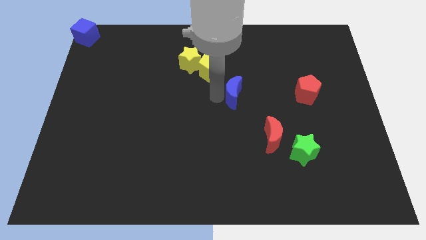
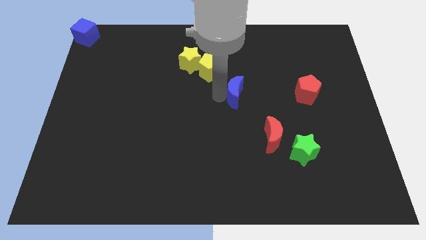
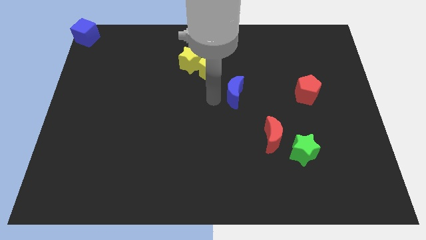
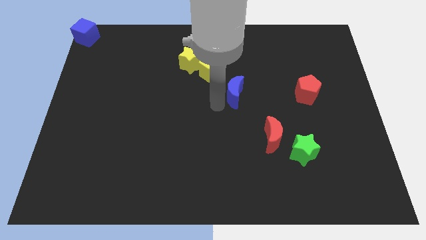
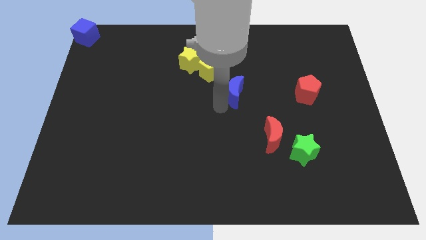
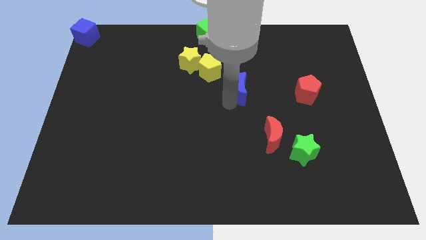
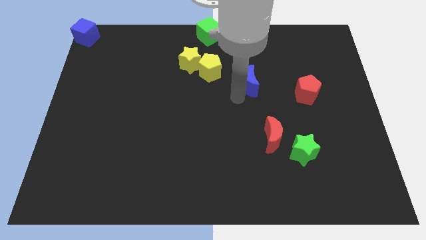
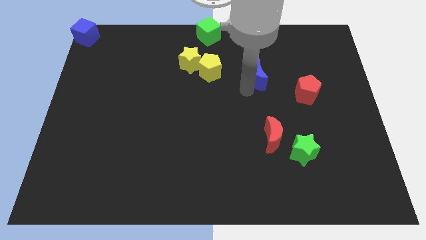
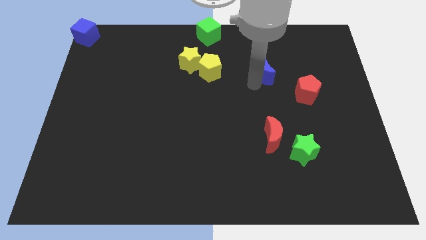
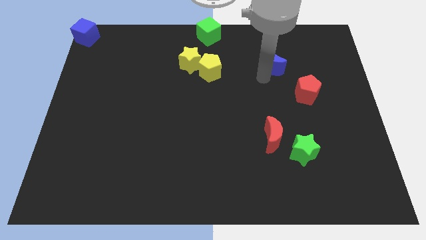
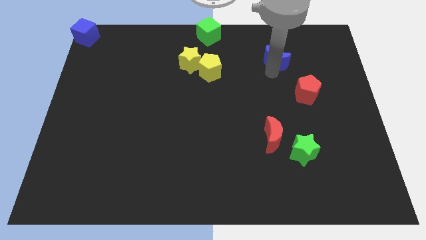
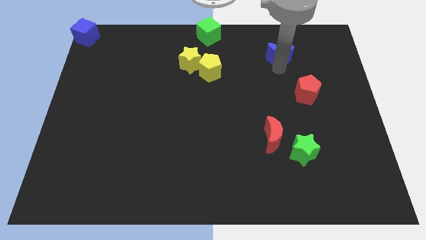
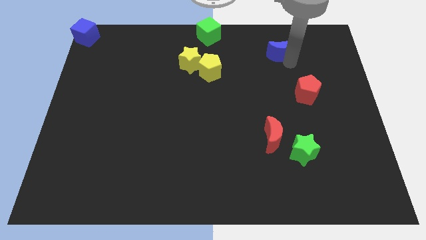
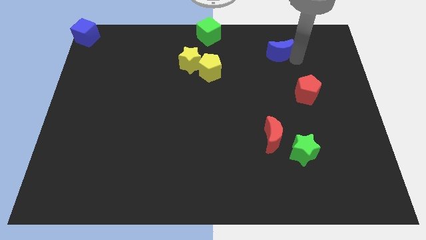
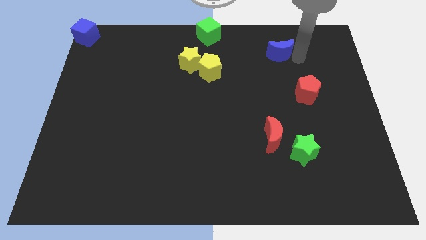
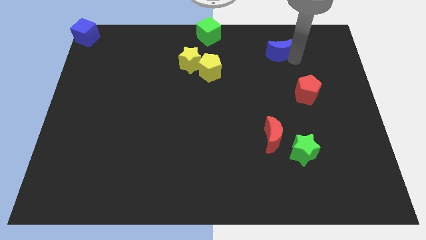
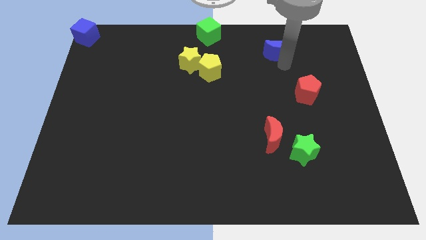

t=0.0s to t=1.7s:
move the blue moon towards the top right

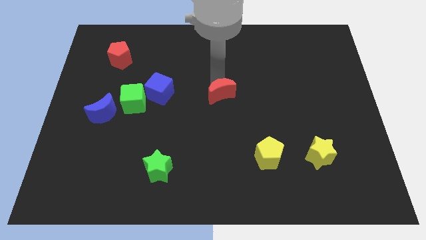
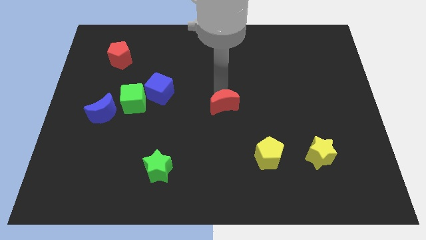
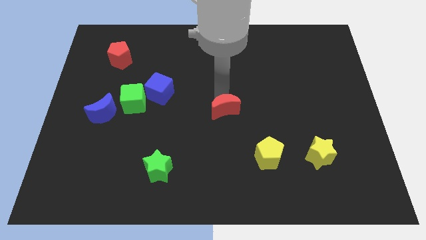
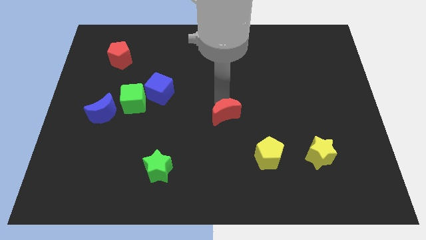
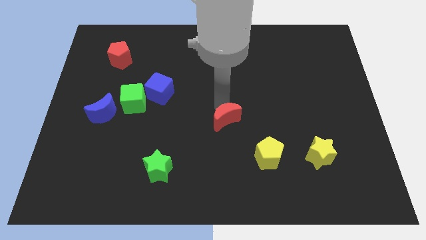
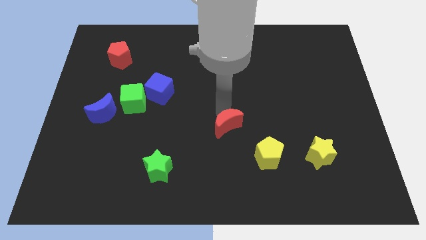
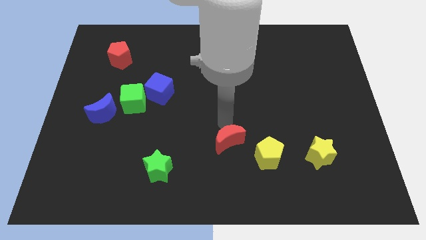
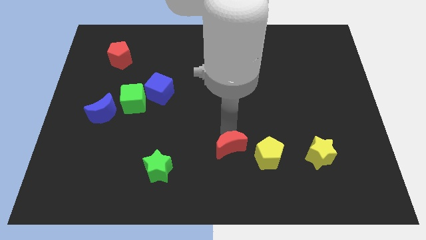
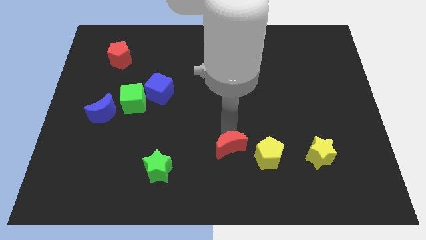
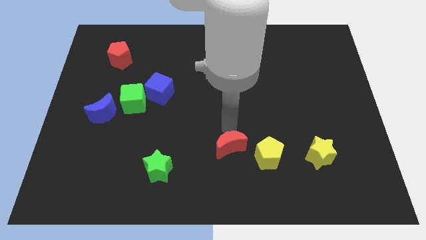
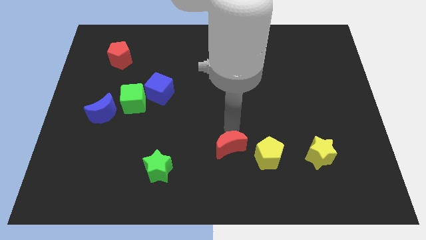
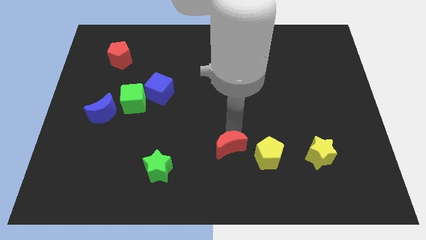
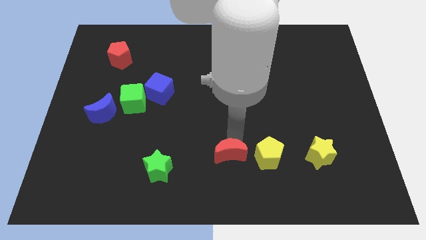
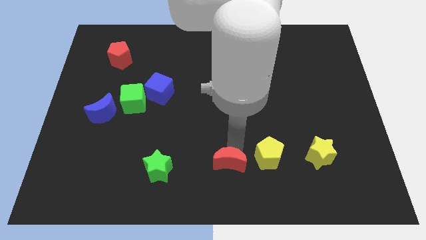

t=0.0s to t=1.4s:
place the red moon to the left side of the yellow pentagon

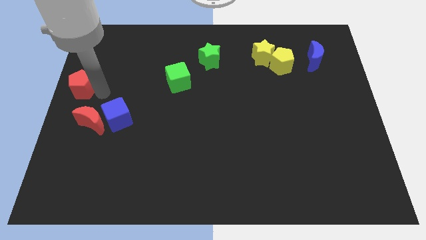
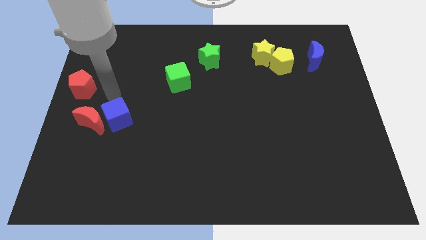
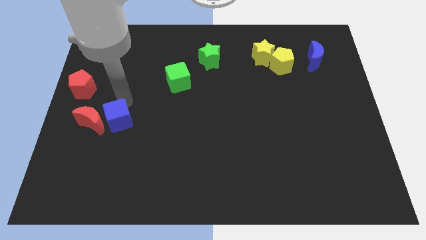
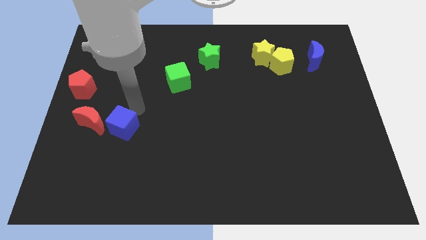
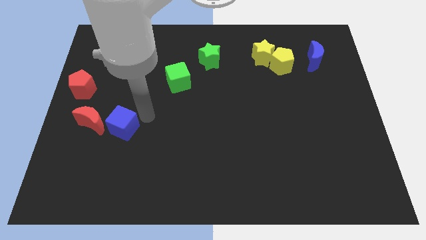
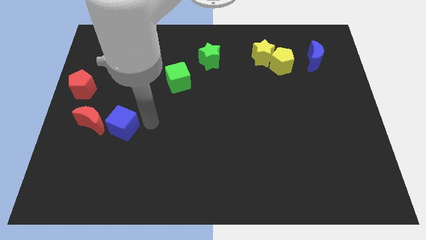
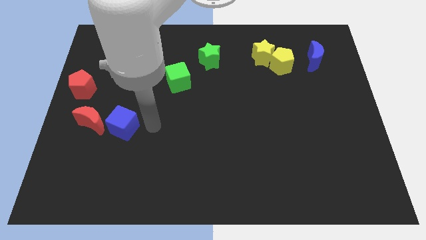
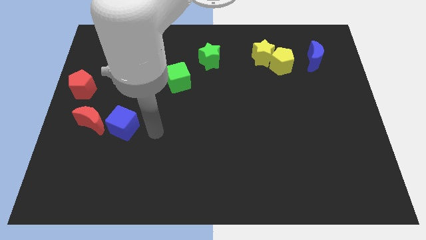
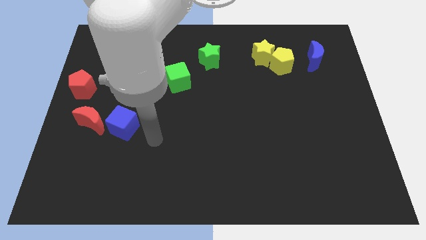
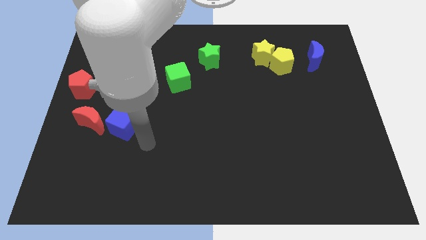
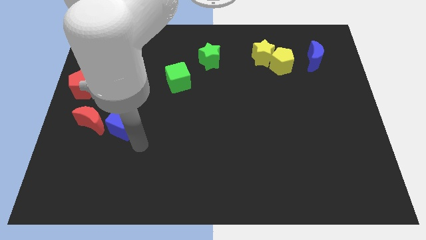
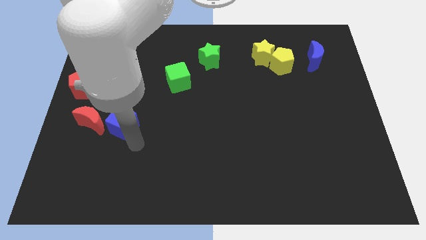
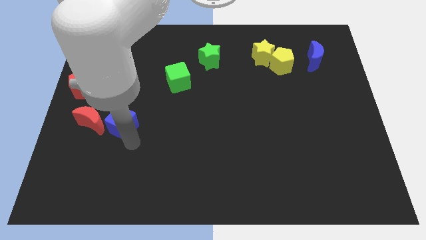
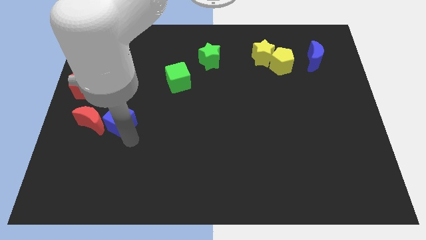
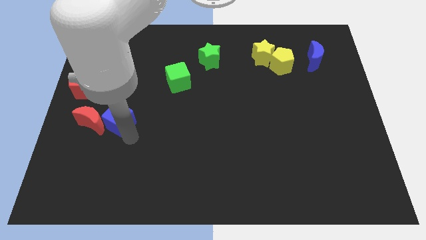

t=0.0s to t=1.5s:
push blue cube slightly

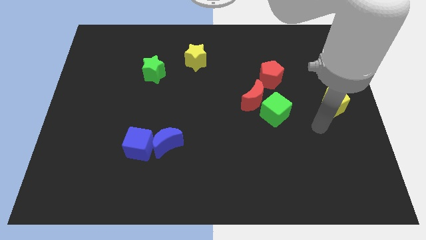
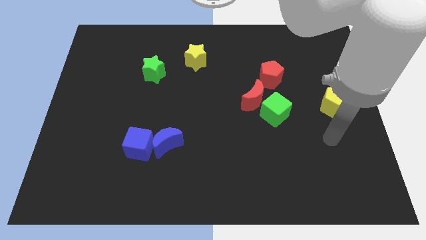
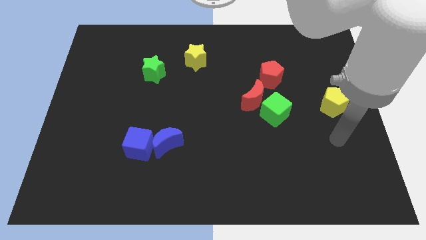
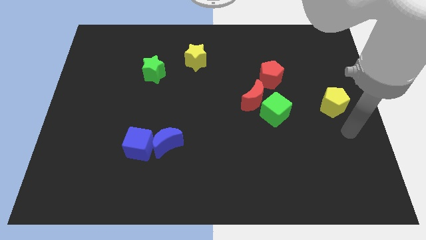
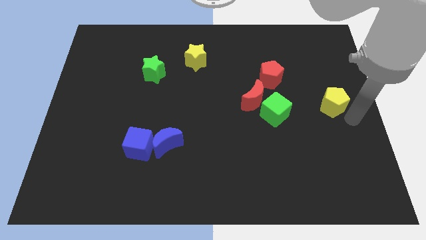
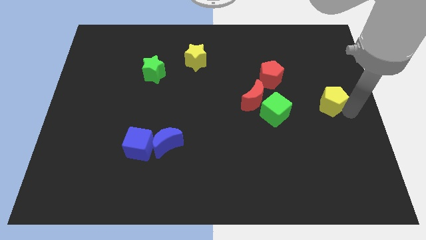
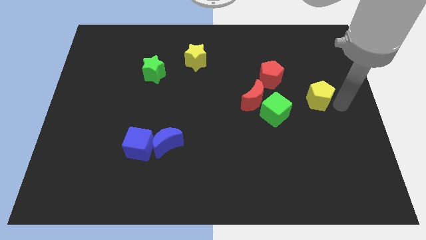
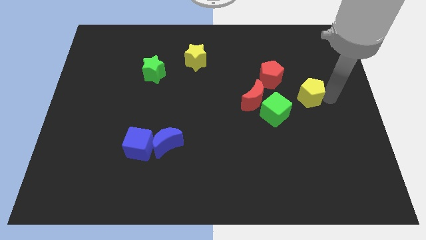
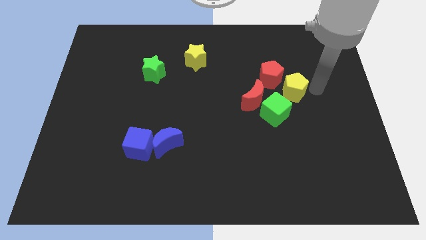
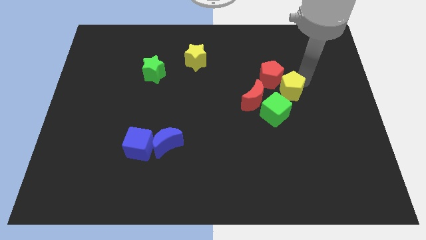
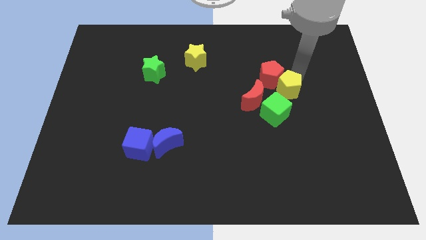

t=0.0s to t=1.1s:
move the yellow pentagon to the group of blocks

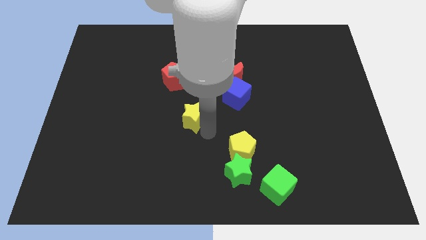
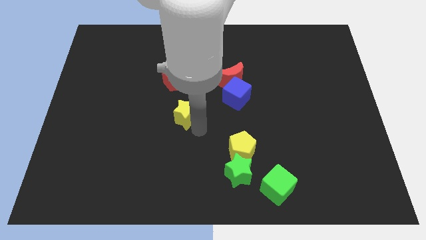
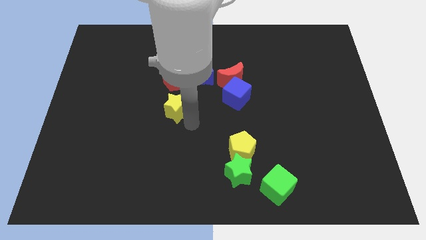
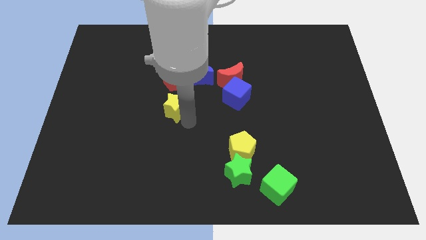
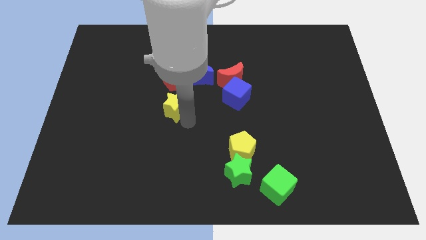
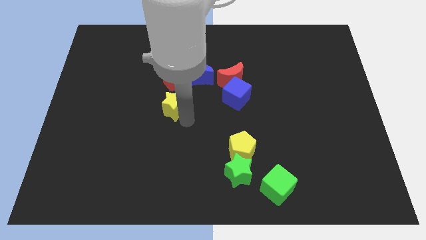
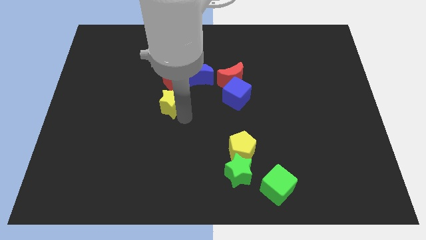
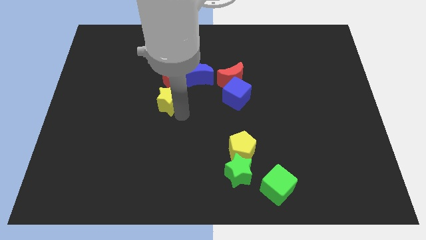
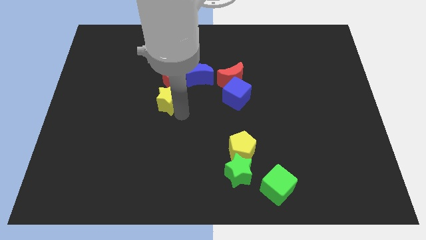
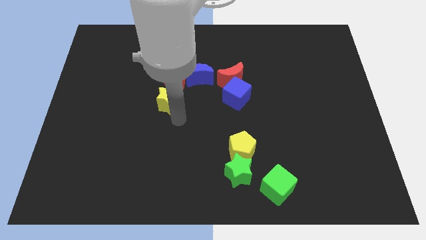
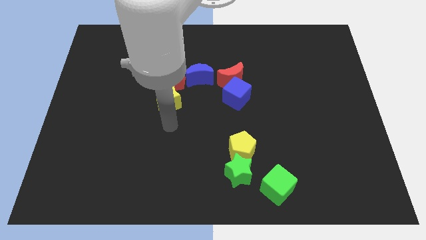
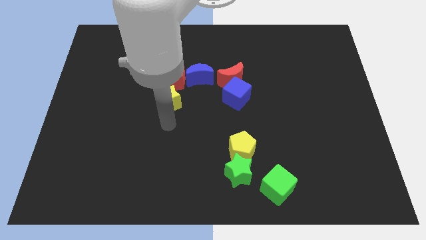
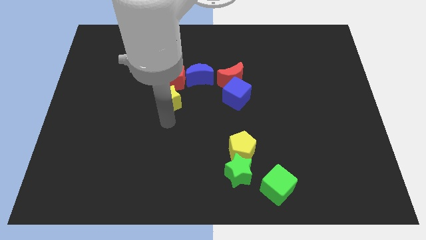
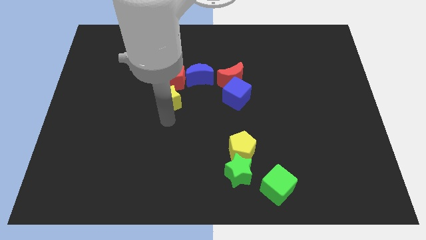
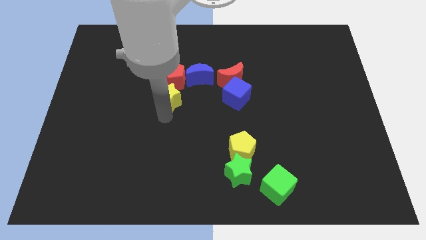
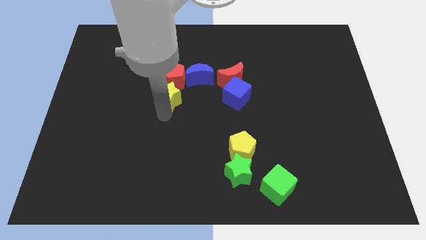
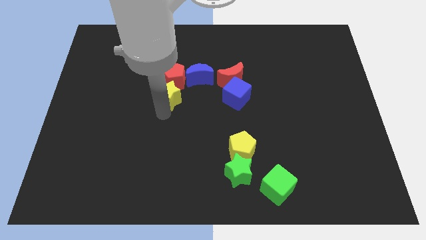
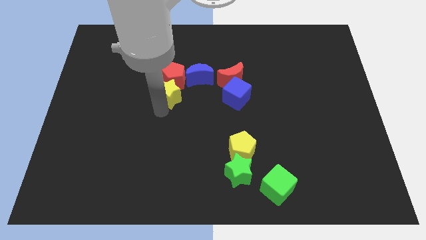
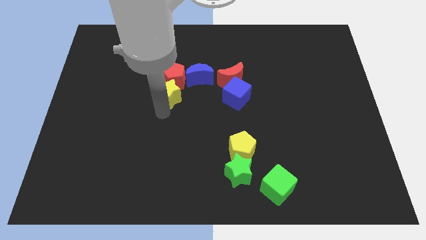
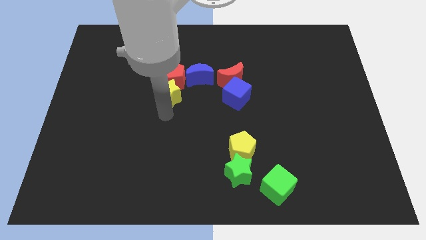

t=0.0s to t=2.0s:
push the yellow star to the bottom of the red pentagon

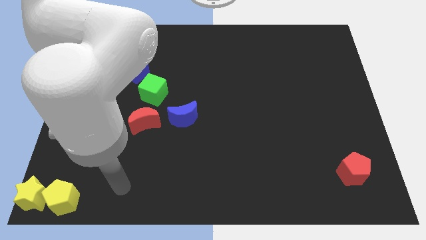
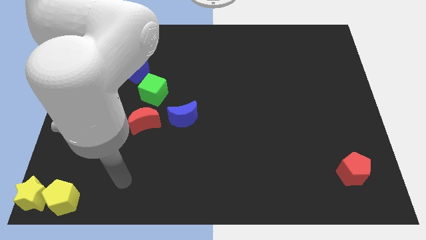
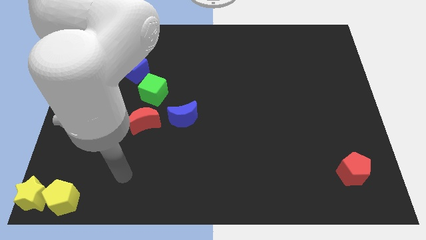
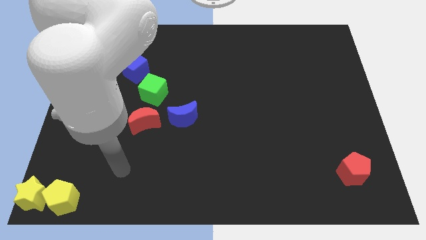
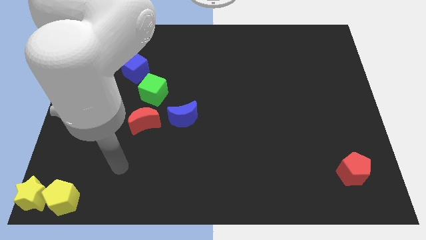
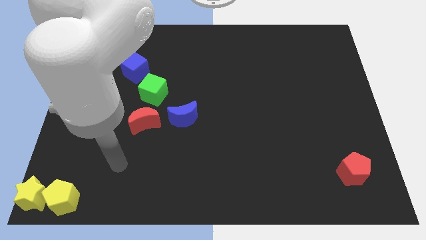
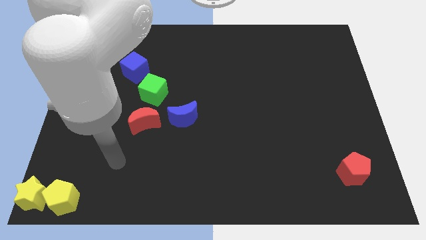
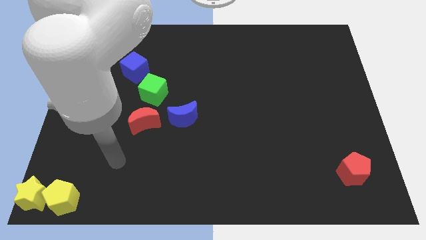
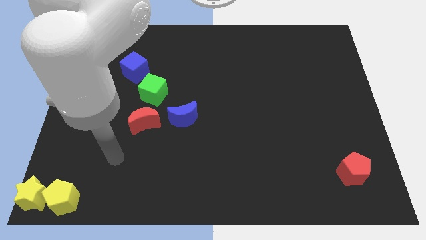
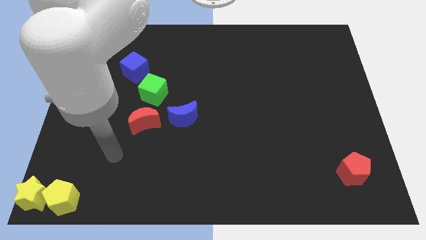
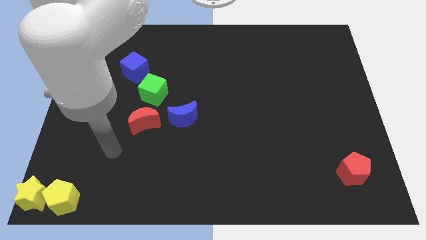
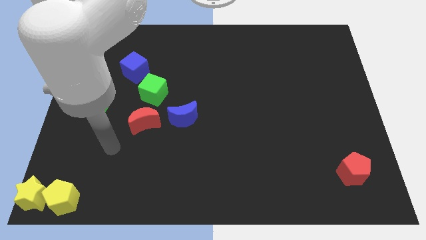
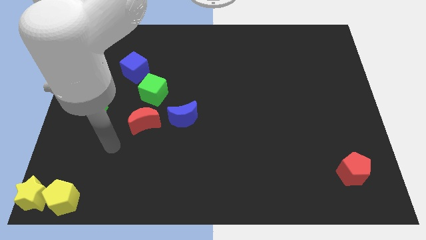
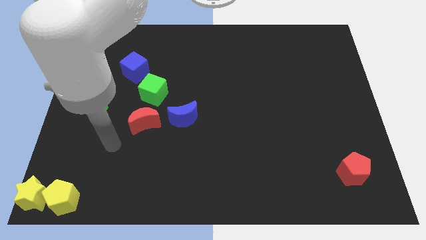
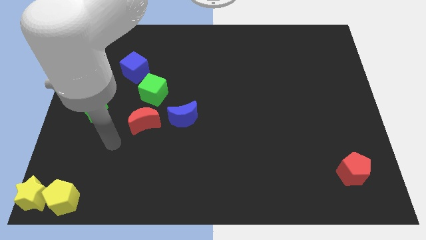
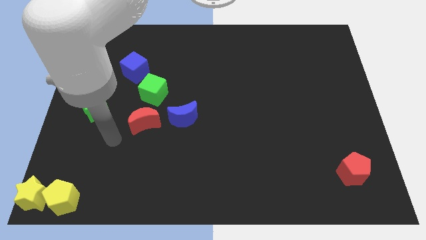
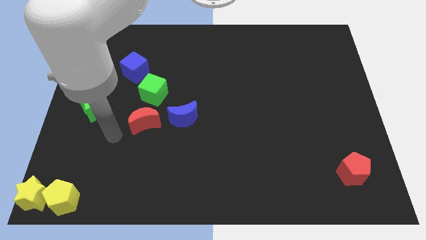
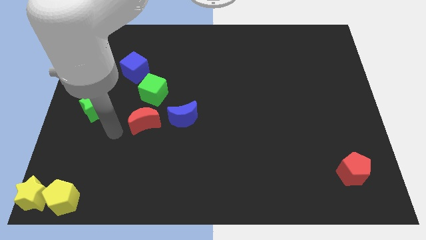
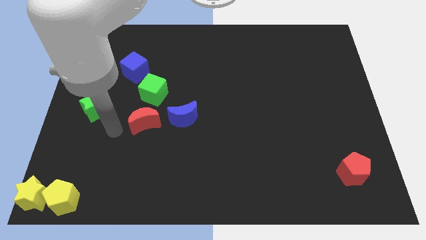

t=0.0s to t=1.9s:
move your arm to the left of the red moon
